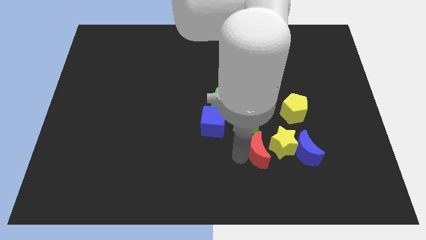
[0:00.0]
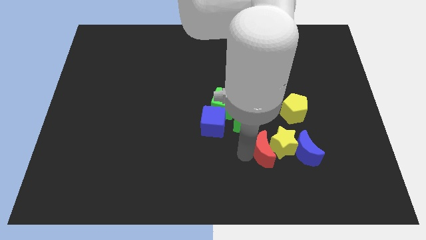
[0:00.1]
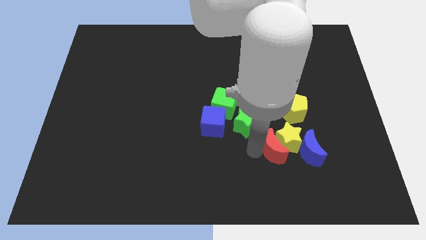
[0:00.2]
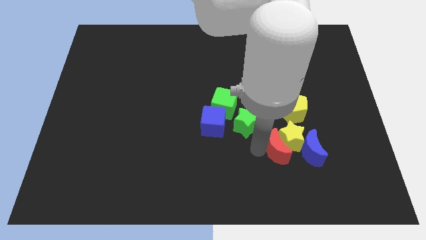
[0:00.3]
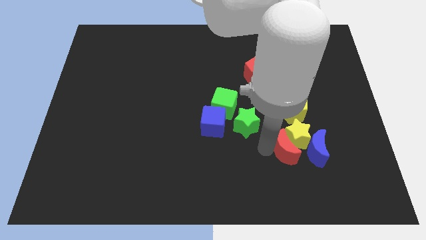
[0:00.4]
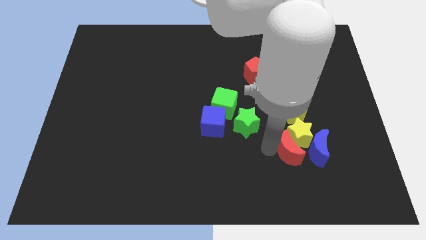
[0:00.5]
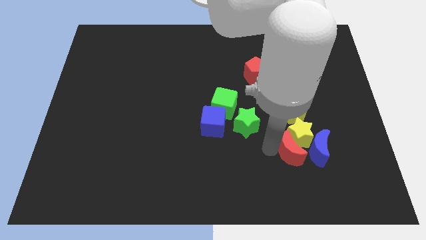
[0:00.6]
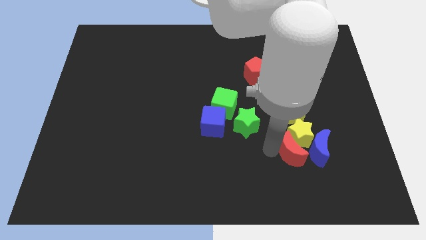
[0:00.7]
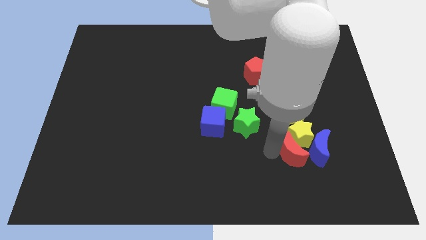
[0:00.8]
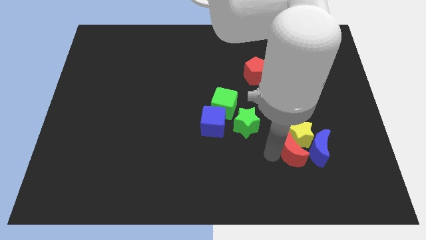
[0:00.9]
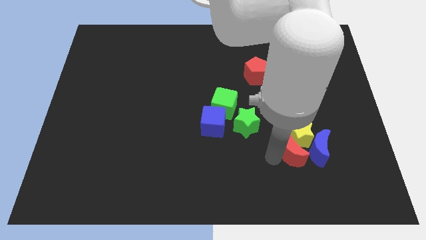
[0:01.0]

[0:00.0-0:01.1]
push red moon into yellow star and blue moon

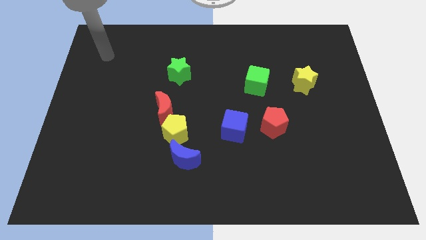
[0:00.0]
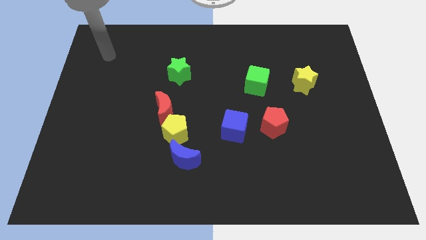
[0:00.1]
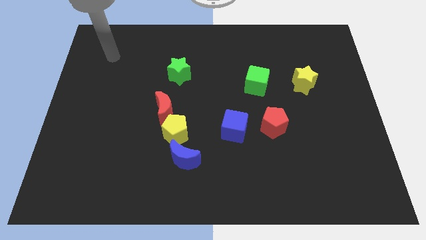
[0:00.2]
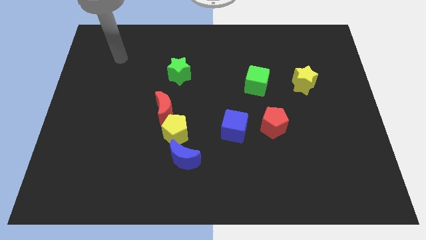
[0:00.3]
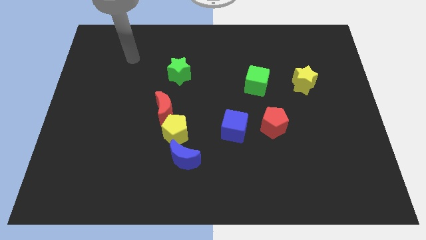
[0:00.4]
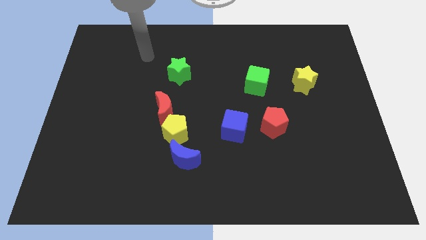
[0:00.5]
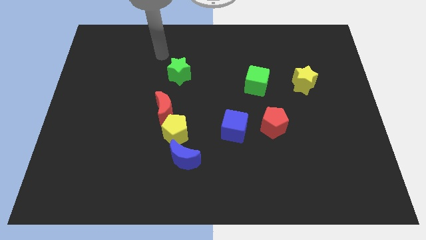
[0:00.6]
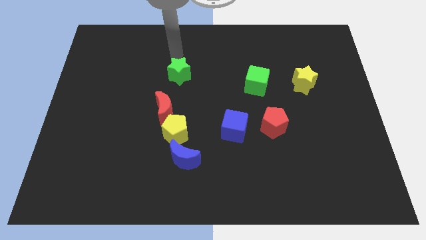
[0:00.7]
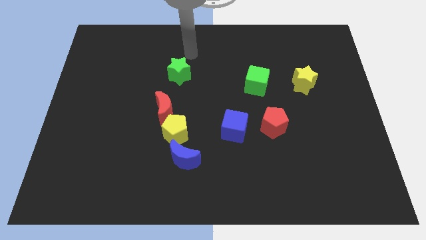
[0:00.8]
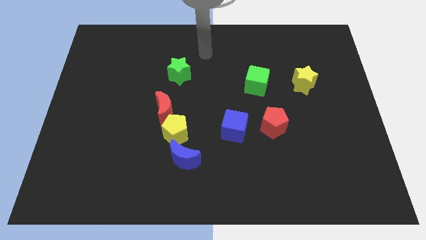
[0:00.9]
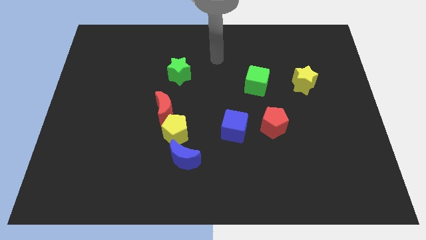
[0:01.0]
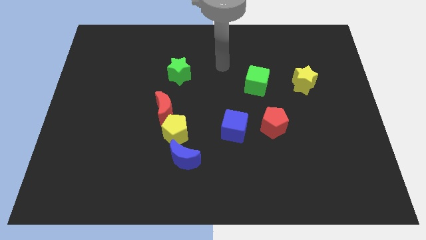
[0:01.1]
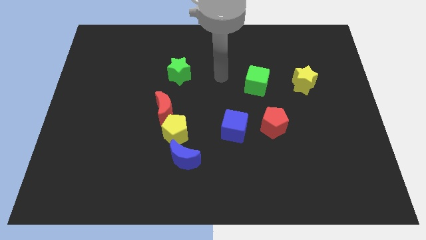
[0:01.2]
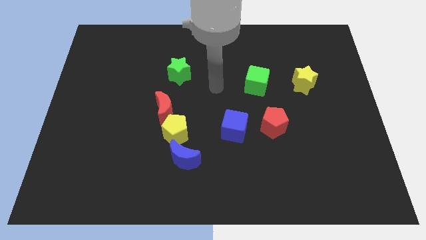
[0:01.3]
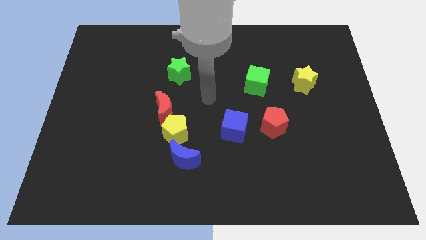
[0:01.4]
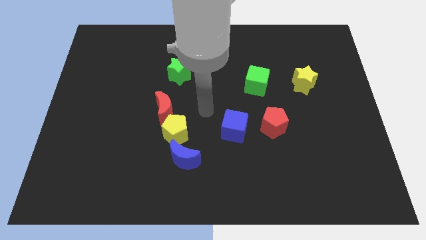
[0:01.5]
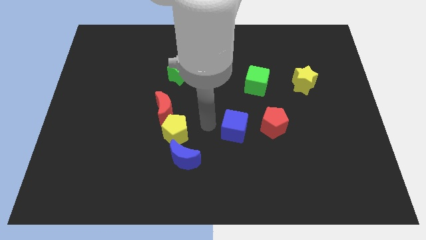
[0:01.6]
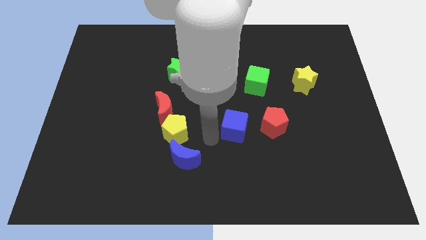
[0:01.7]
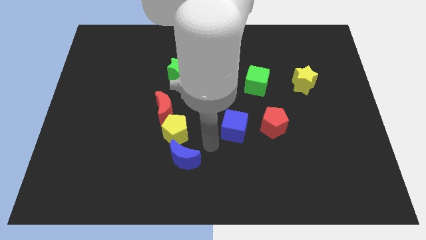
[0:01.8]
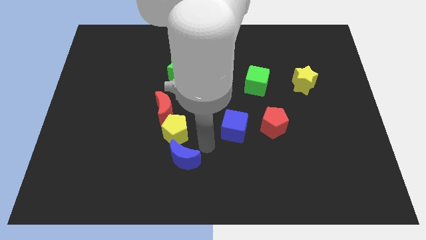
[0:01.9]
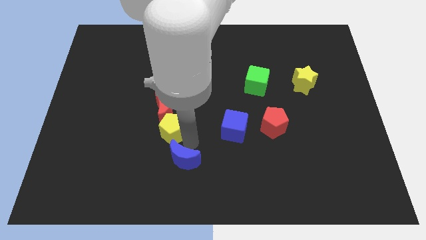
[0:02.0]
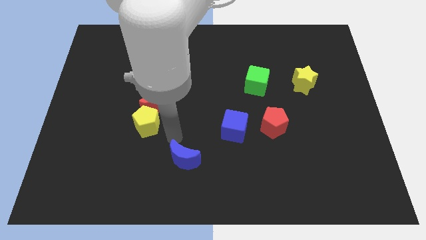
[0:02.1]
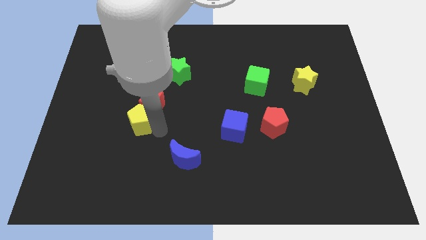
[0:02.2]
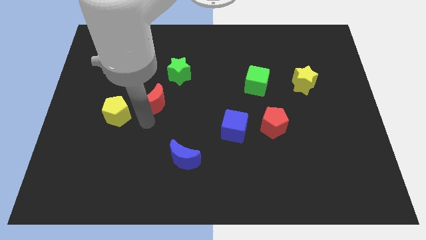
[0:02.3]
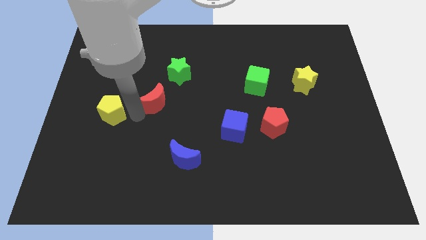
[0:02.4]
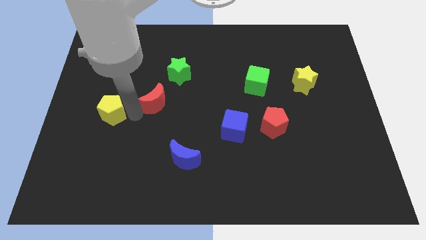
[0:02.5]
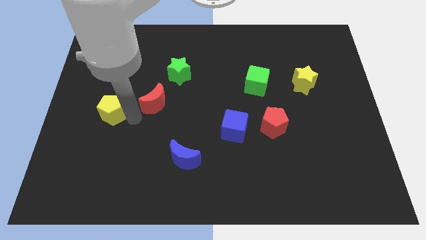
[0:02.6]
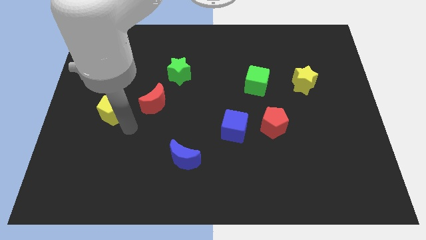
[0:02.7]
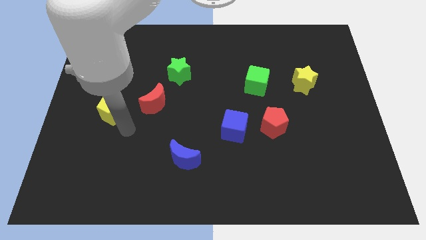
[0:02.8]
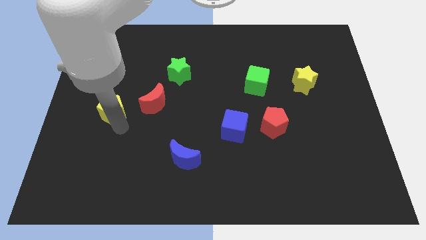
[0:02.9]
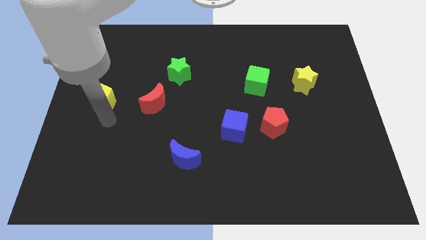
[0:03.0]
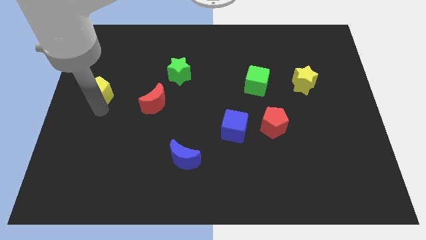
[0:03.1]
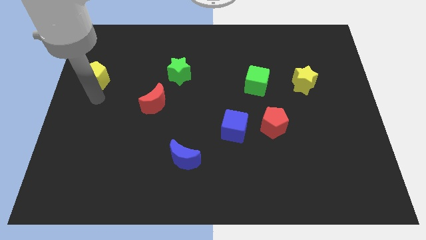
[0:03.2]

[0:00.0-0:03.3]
move your arm towards the bottom of yellow pentagon

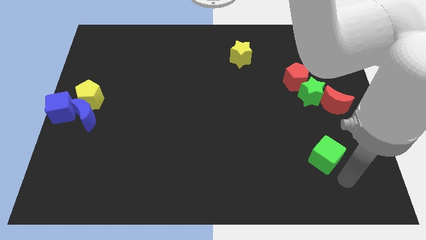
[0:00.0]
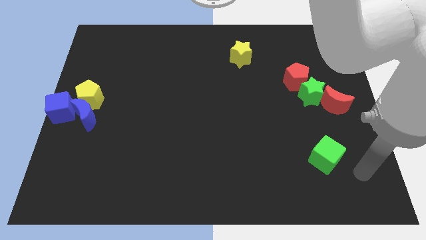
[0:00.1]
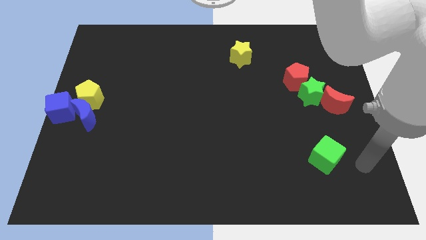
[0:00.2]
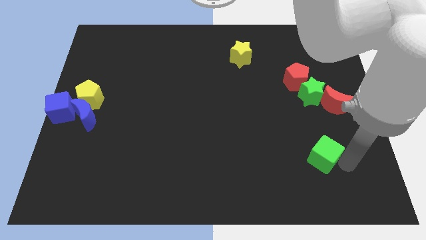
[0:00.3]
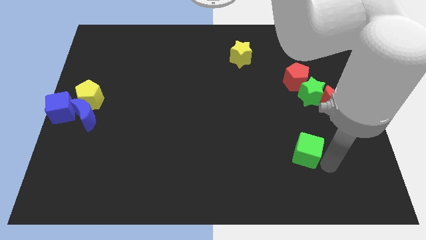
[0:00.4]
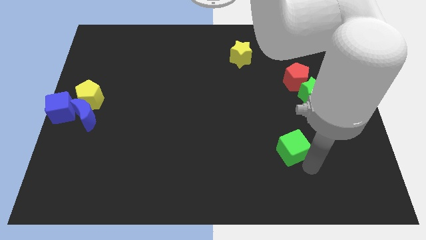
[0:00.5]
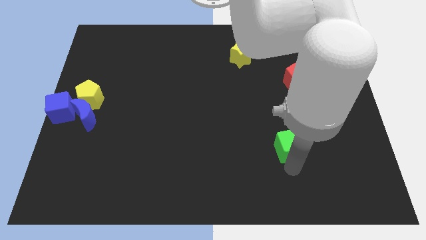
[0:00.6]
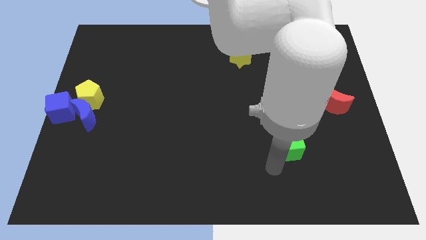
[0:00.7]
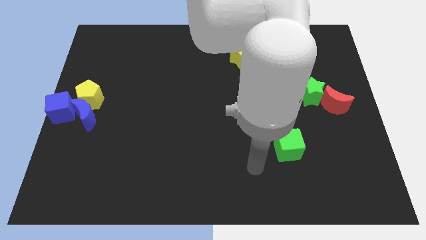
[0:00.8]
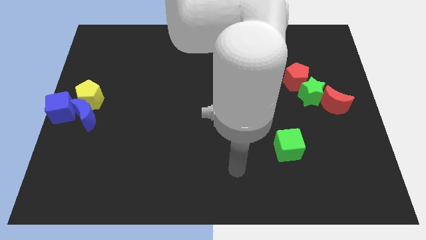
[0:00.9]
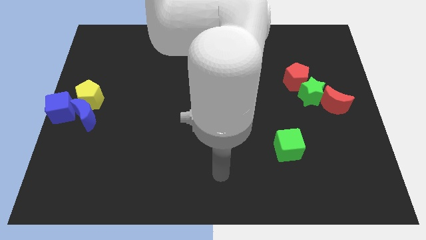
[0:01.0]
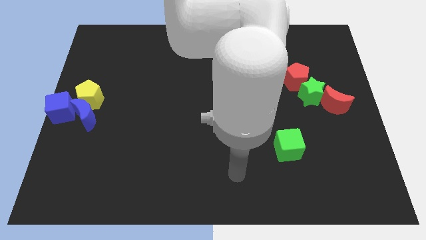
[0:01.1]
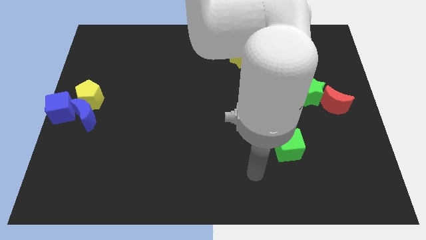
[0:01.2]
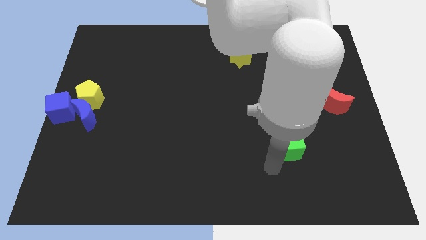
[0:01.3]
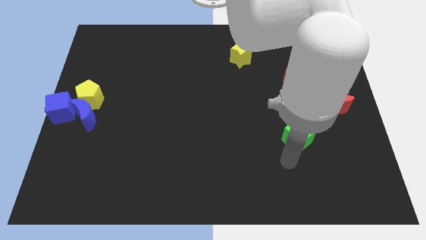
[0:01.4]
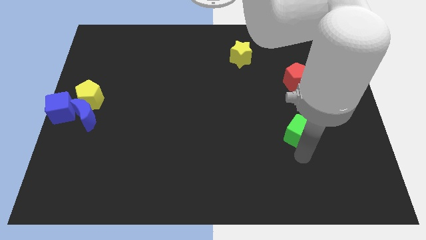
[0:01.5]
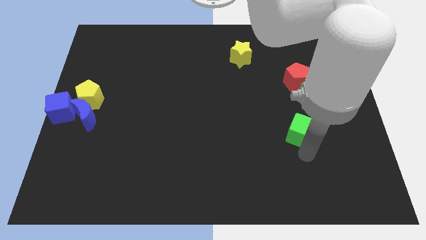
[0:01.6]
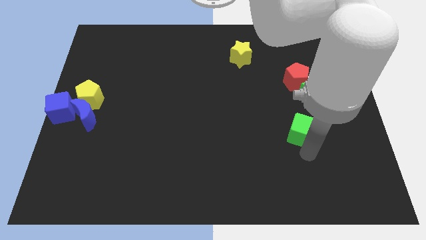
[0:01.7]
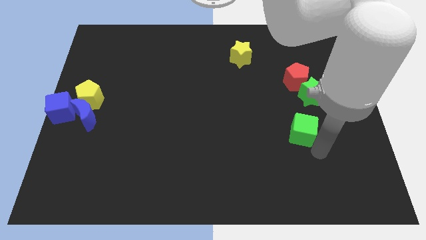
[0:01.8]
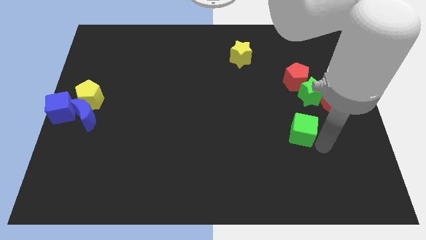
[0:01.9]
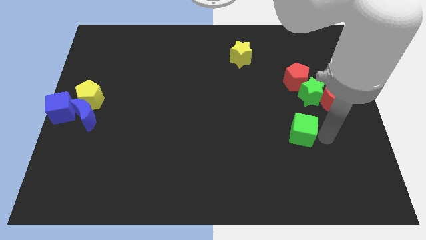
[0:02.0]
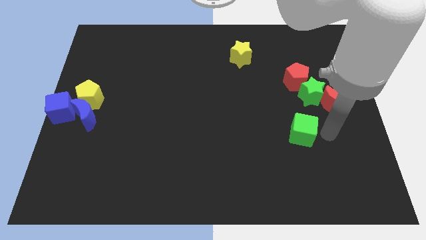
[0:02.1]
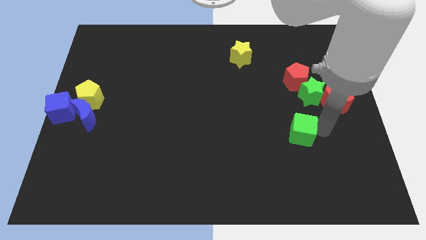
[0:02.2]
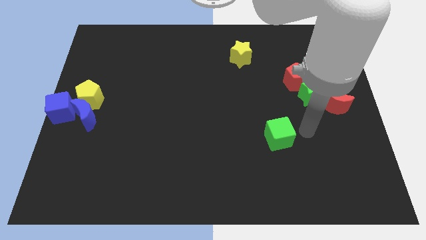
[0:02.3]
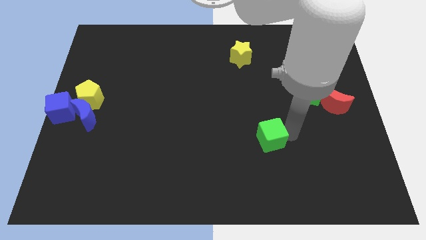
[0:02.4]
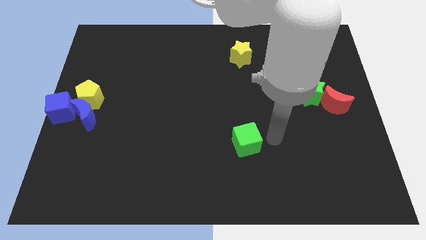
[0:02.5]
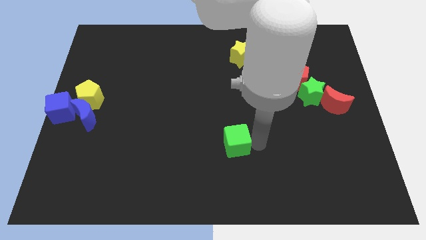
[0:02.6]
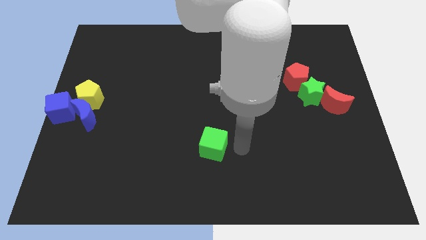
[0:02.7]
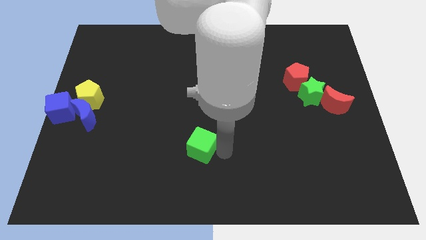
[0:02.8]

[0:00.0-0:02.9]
drag the green cube towards the left side of the board

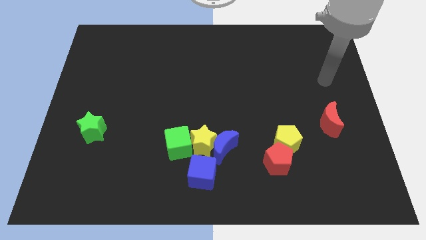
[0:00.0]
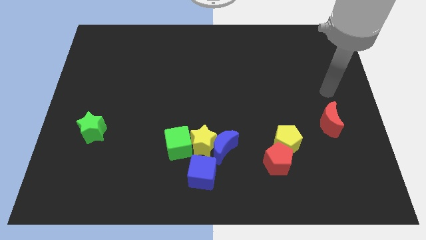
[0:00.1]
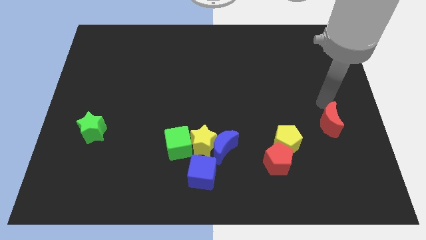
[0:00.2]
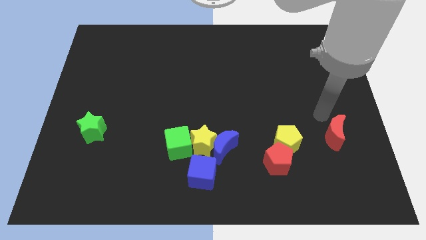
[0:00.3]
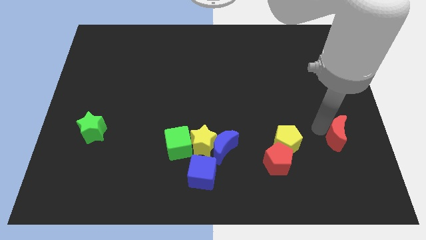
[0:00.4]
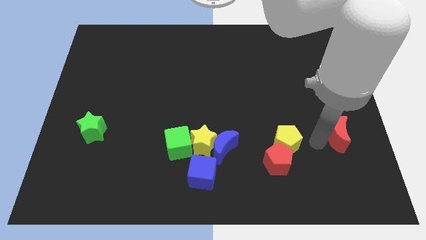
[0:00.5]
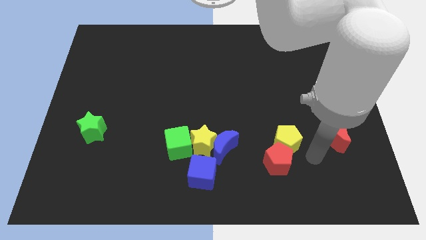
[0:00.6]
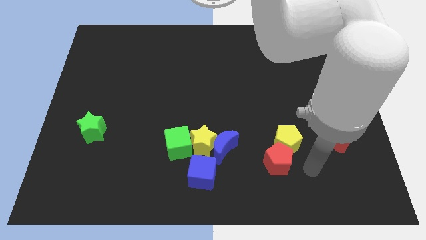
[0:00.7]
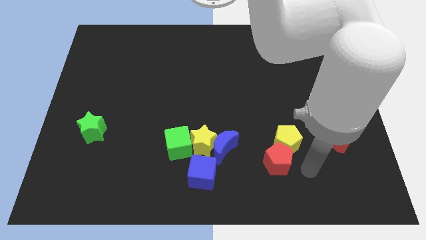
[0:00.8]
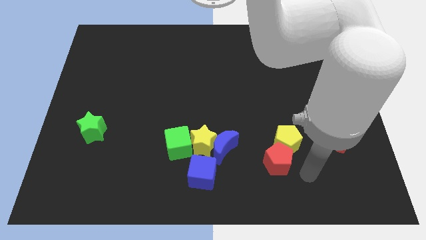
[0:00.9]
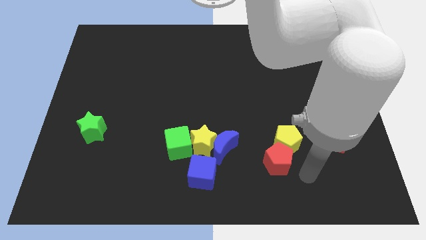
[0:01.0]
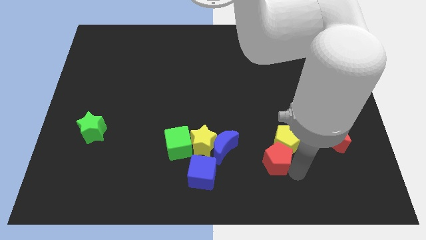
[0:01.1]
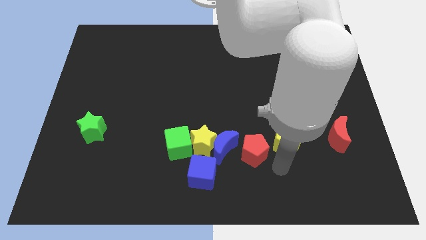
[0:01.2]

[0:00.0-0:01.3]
place your arm at the bottom of red pentagon

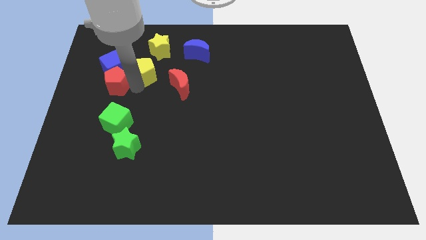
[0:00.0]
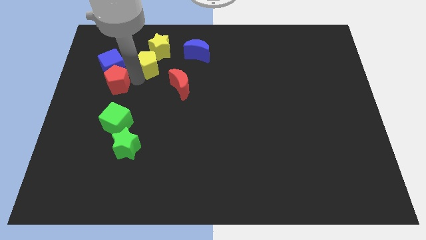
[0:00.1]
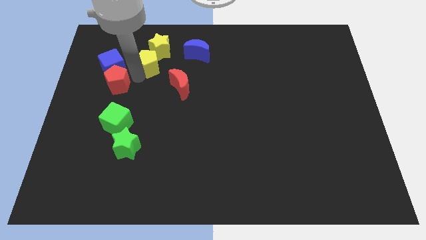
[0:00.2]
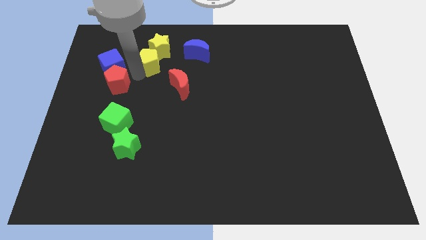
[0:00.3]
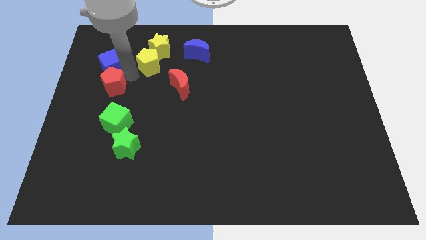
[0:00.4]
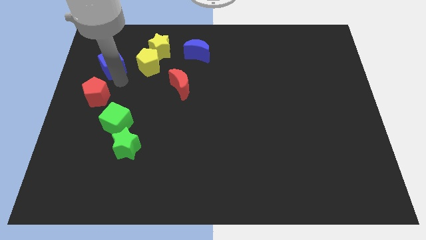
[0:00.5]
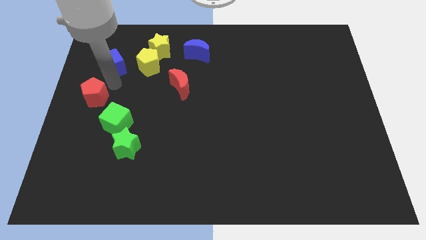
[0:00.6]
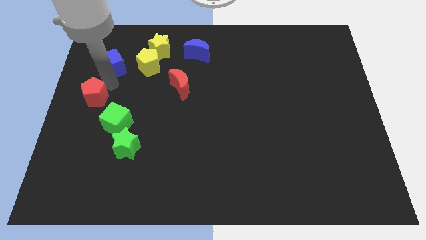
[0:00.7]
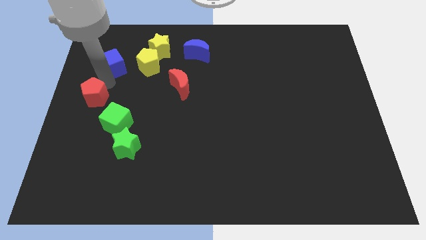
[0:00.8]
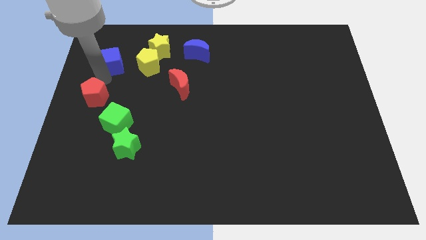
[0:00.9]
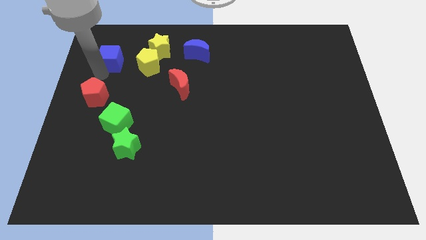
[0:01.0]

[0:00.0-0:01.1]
push the red pentagon slightly to the left
